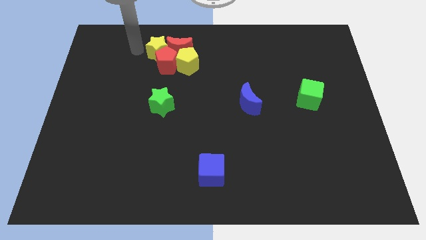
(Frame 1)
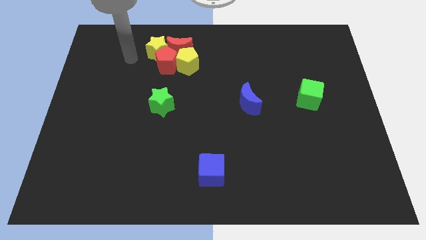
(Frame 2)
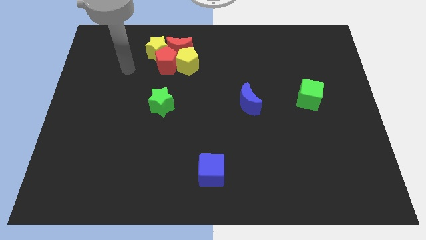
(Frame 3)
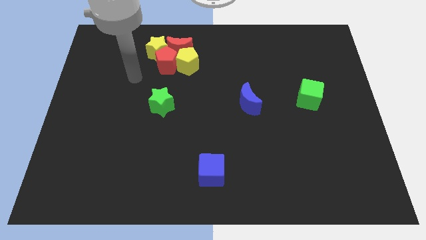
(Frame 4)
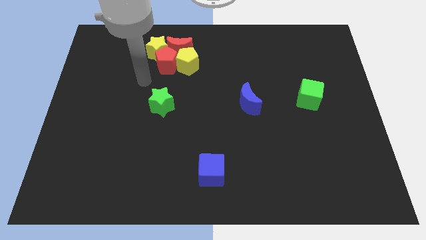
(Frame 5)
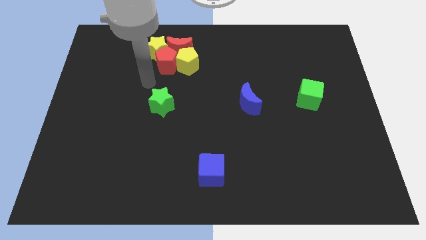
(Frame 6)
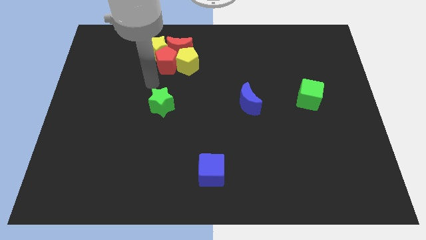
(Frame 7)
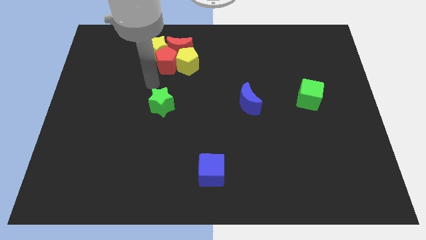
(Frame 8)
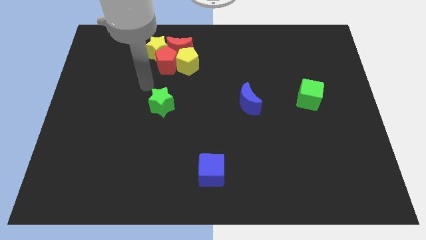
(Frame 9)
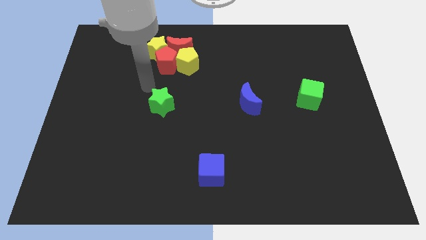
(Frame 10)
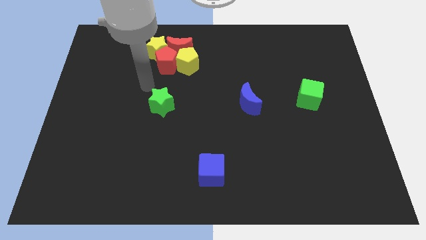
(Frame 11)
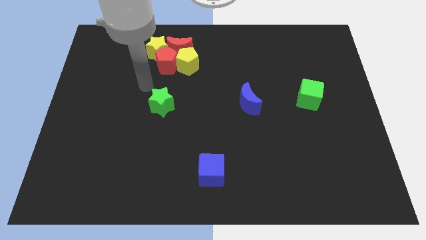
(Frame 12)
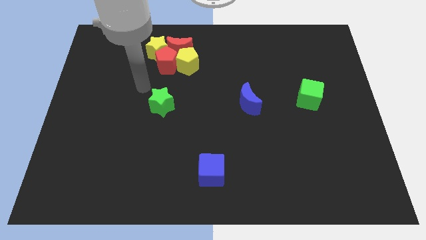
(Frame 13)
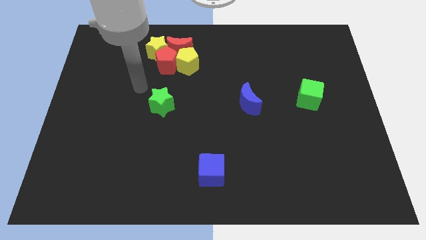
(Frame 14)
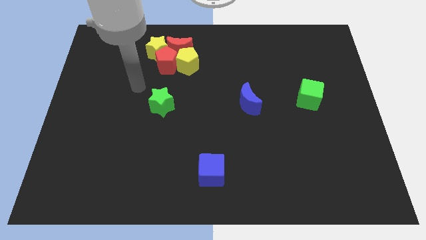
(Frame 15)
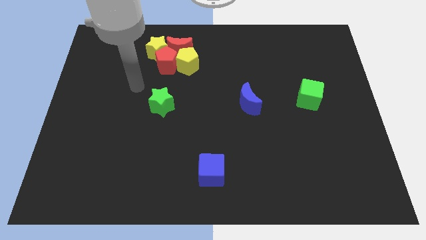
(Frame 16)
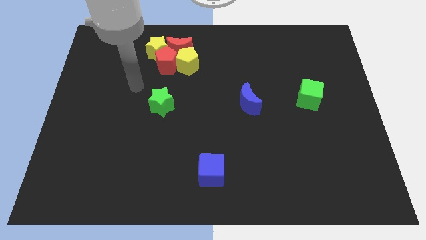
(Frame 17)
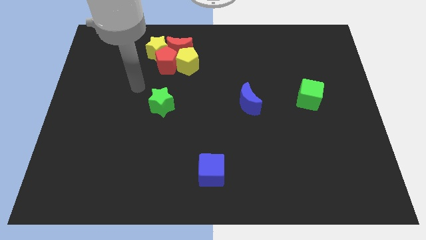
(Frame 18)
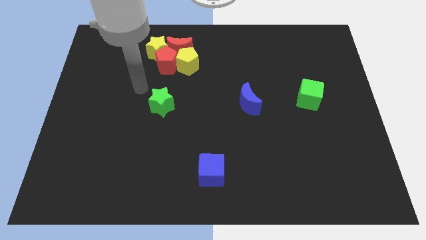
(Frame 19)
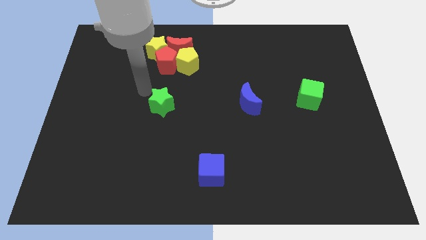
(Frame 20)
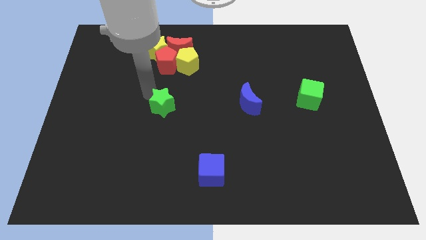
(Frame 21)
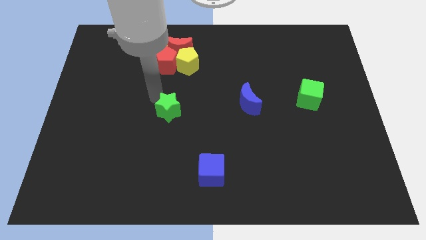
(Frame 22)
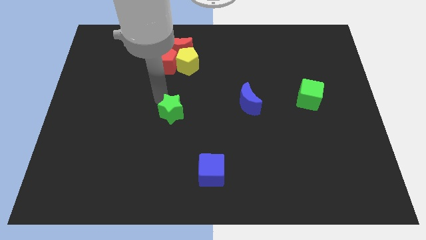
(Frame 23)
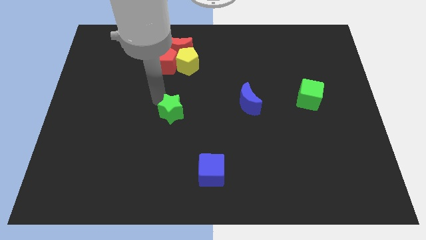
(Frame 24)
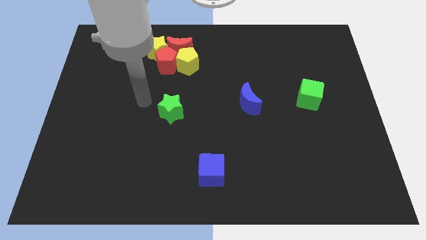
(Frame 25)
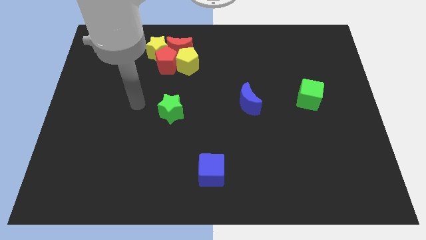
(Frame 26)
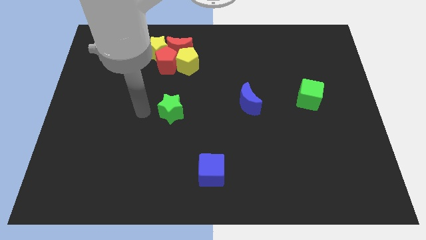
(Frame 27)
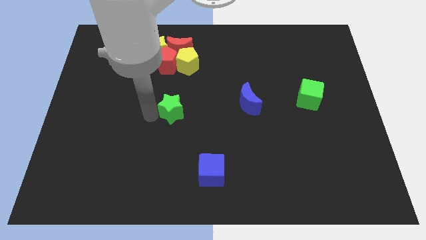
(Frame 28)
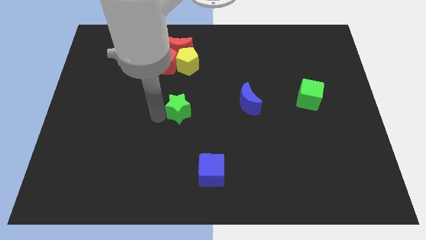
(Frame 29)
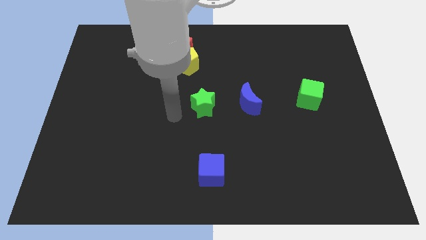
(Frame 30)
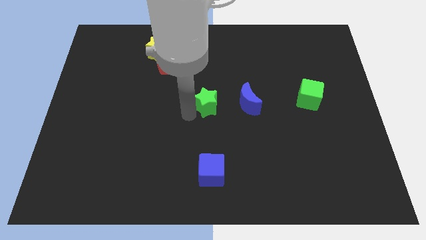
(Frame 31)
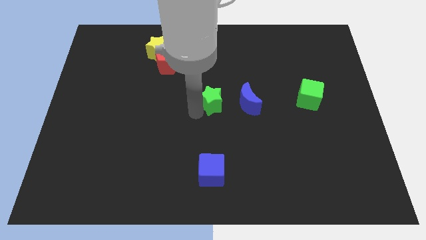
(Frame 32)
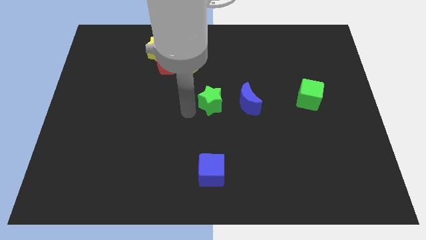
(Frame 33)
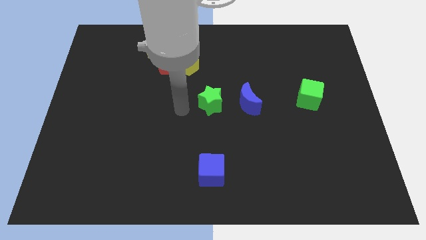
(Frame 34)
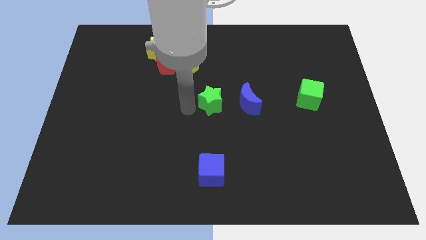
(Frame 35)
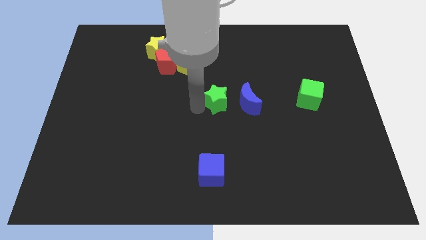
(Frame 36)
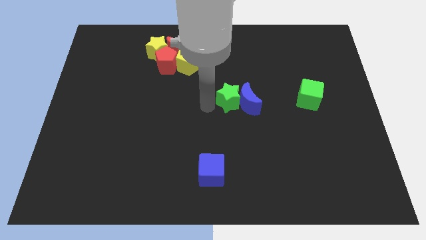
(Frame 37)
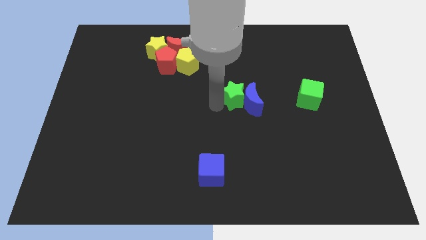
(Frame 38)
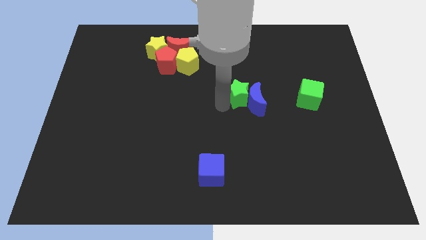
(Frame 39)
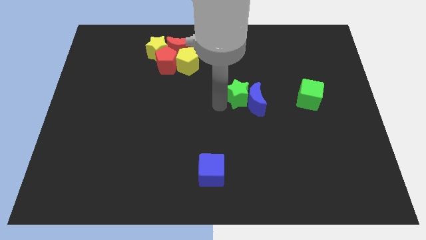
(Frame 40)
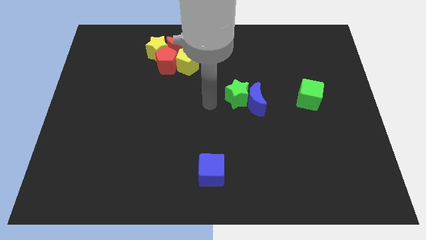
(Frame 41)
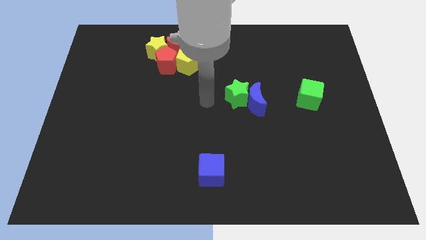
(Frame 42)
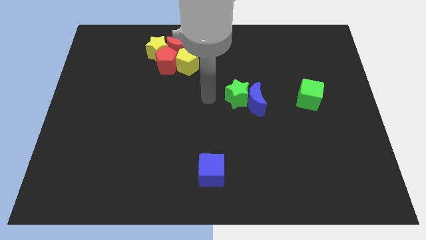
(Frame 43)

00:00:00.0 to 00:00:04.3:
push the green star into blue moon

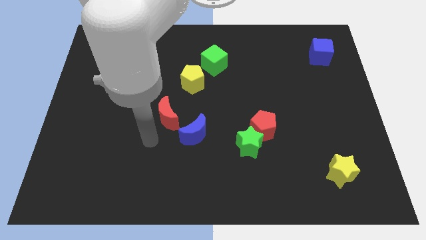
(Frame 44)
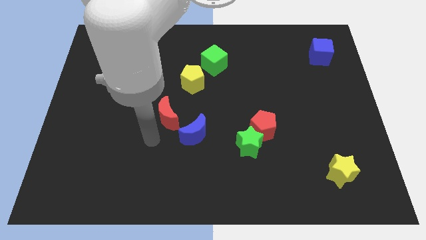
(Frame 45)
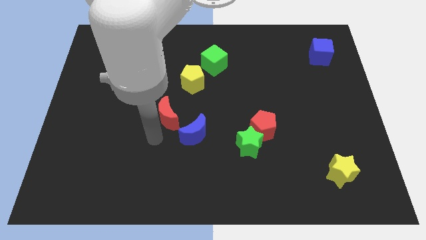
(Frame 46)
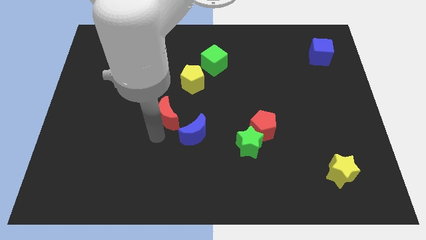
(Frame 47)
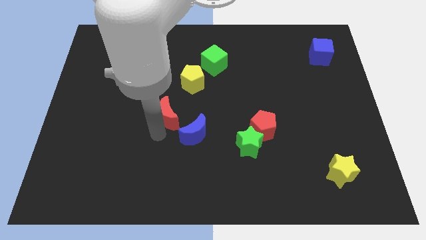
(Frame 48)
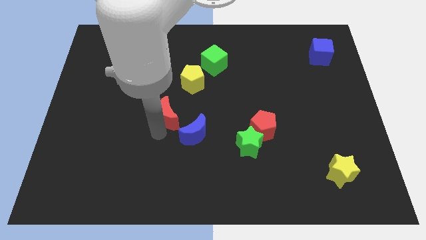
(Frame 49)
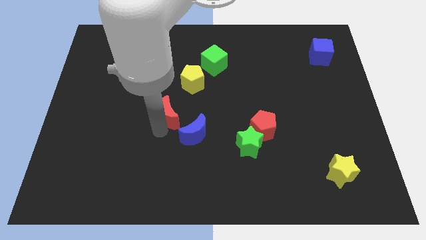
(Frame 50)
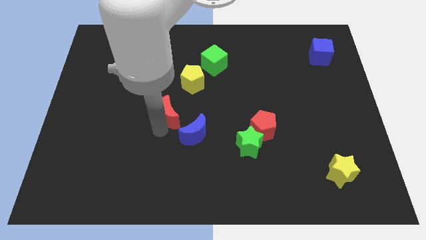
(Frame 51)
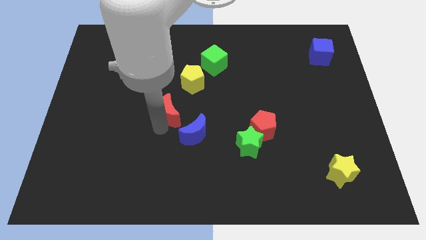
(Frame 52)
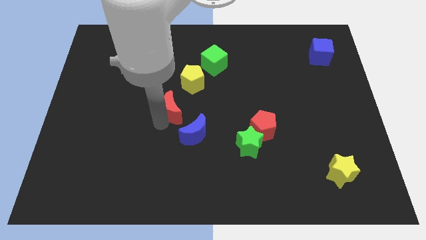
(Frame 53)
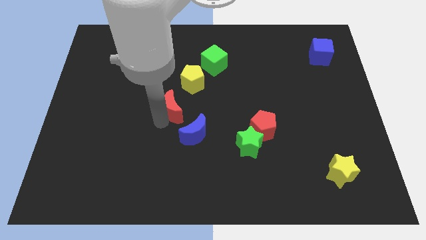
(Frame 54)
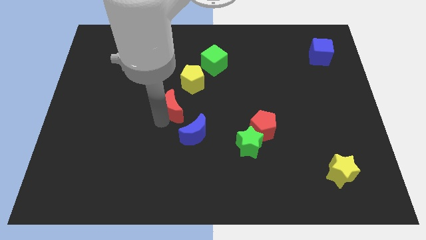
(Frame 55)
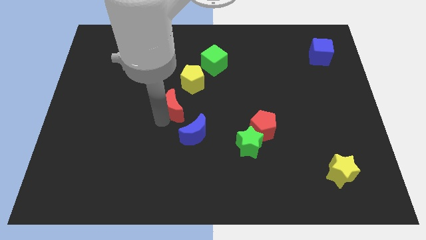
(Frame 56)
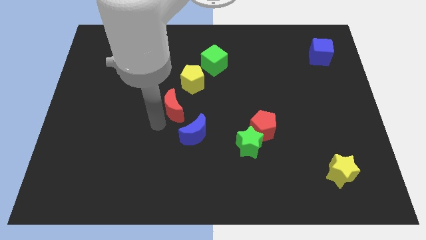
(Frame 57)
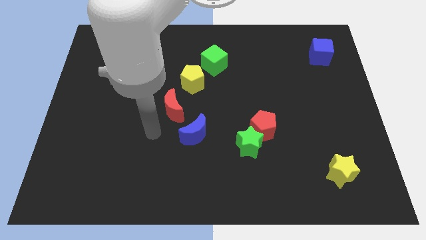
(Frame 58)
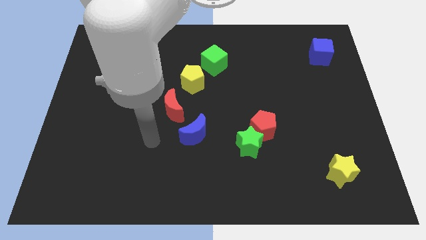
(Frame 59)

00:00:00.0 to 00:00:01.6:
push red crescent towards yellow pentagon

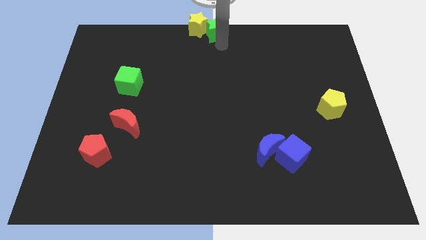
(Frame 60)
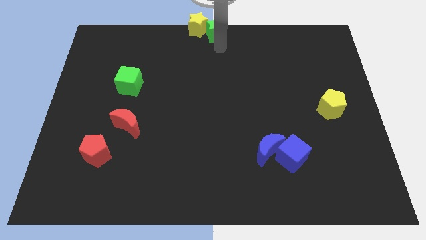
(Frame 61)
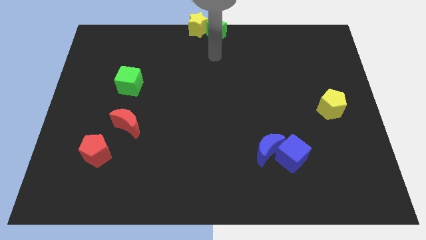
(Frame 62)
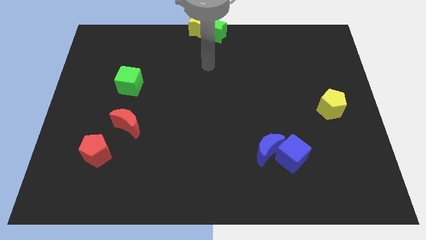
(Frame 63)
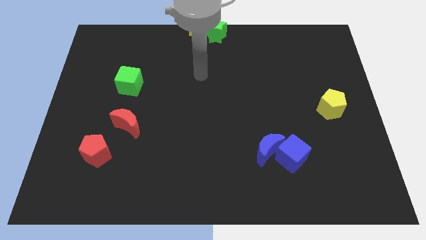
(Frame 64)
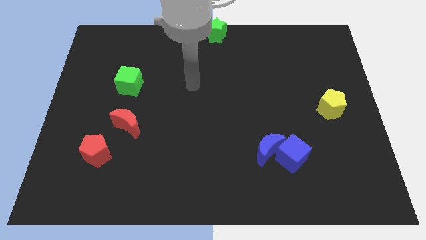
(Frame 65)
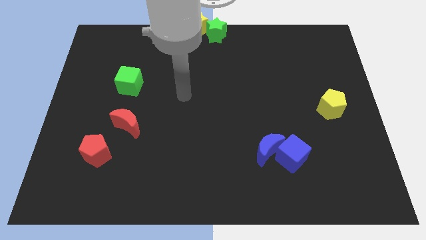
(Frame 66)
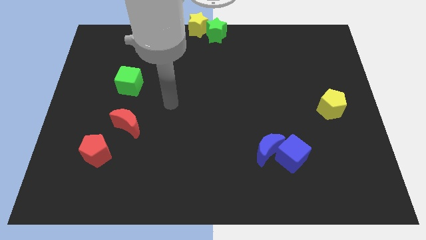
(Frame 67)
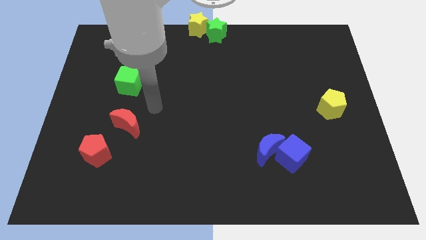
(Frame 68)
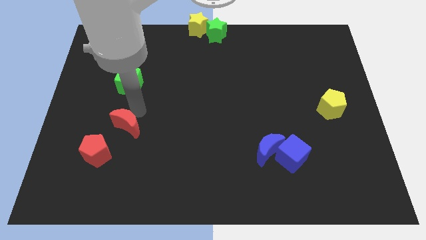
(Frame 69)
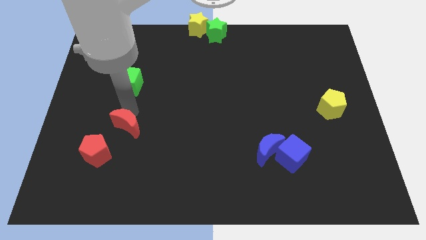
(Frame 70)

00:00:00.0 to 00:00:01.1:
move your arm away from the green star

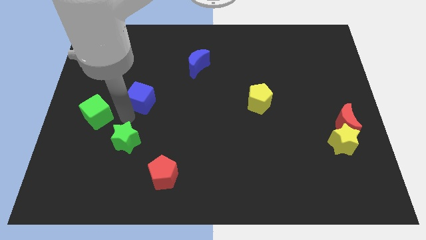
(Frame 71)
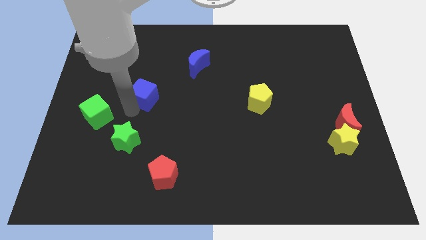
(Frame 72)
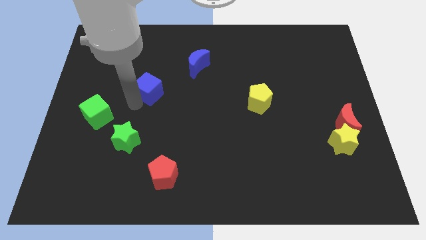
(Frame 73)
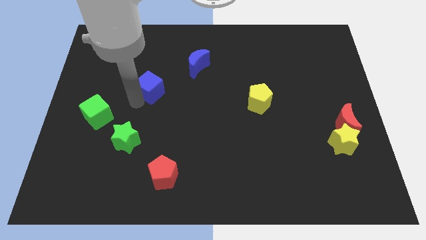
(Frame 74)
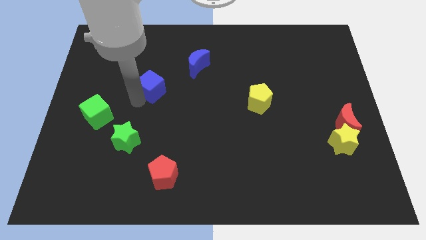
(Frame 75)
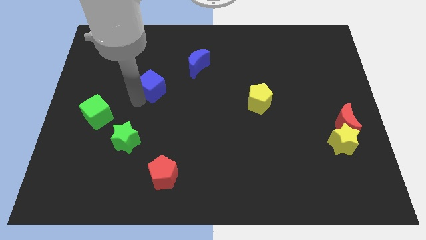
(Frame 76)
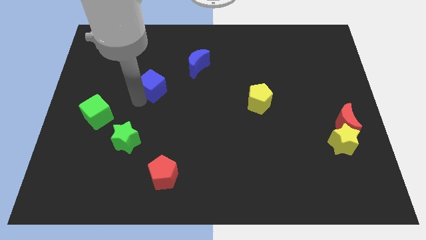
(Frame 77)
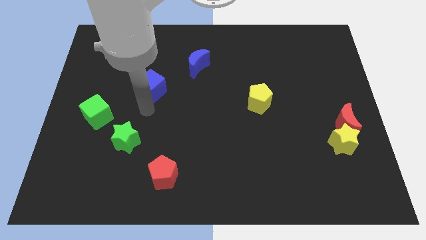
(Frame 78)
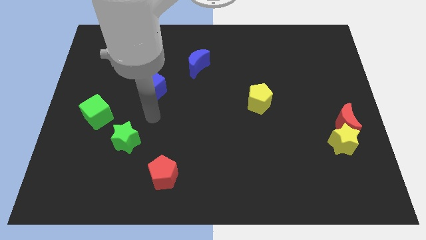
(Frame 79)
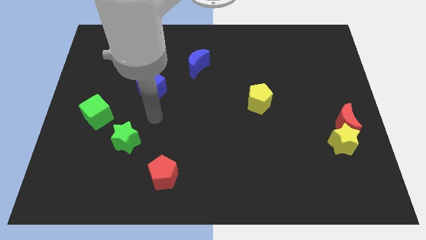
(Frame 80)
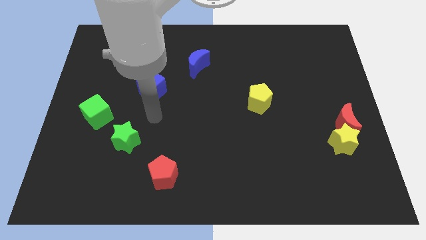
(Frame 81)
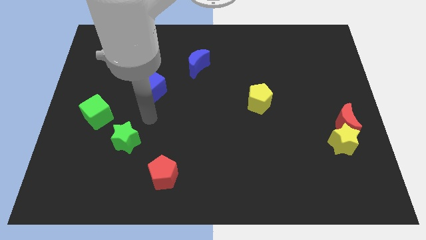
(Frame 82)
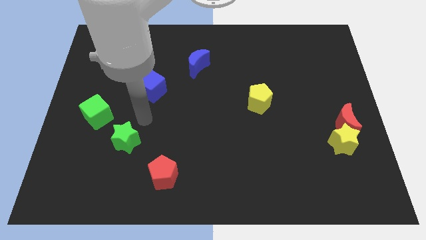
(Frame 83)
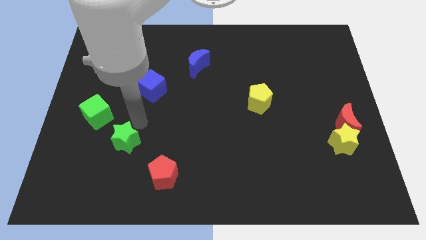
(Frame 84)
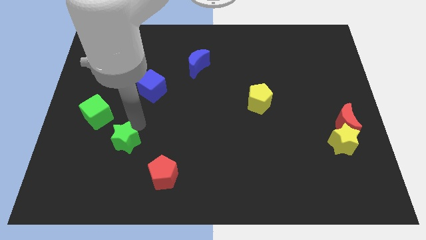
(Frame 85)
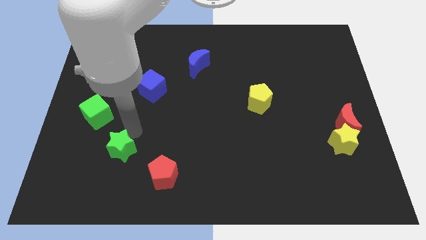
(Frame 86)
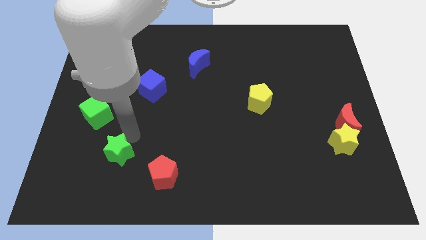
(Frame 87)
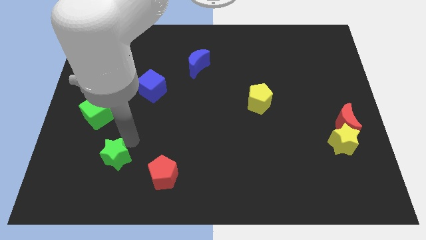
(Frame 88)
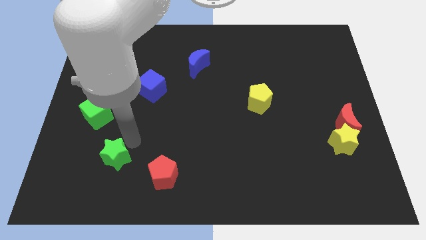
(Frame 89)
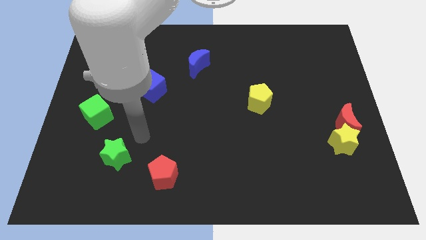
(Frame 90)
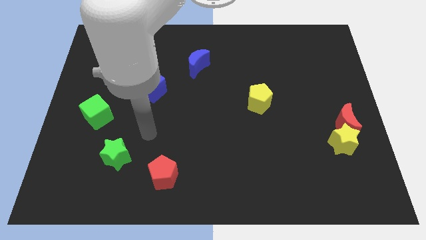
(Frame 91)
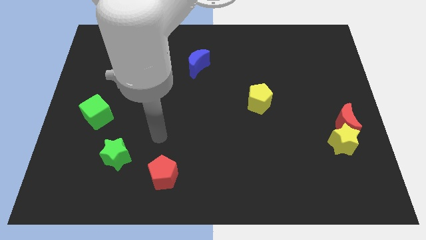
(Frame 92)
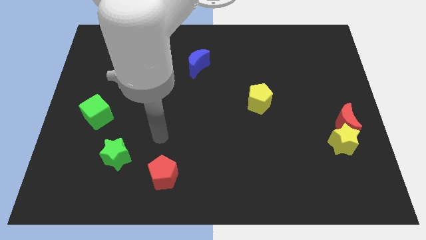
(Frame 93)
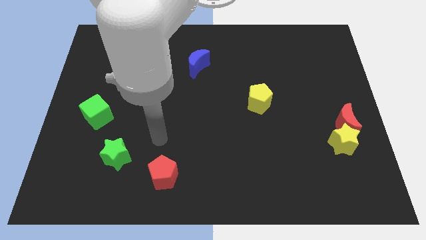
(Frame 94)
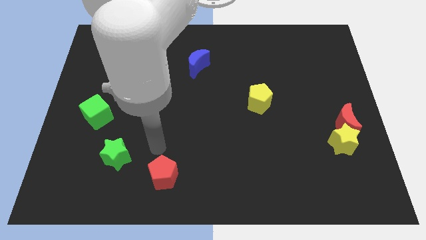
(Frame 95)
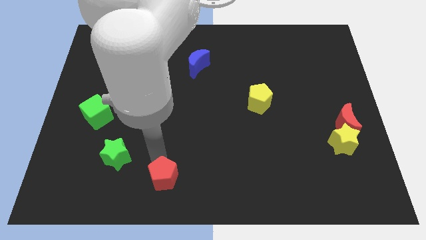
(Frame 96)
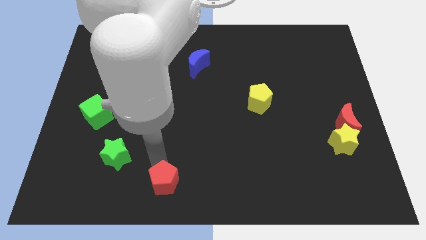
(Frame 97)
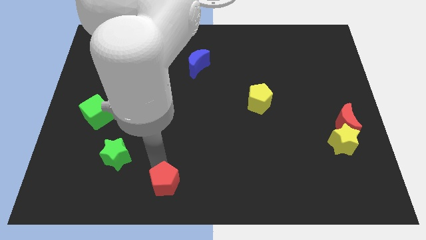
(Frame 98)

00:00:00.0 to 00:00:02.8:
slightly push green star towards the bottom of the board
